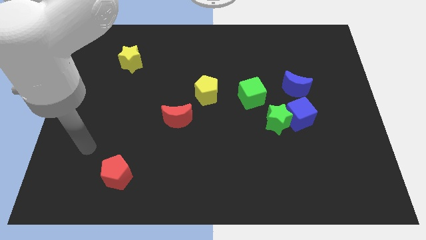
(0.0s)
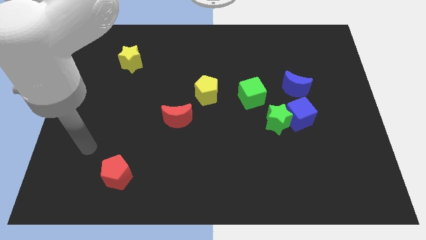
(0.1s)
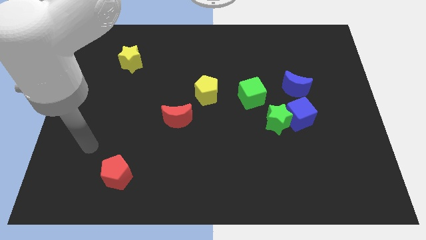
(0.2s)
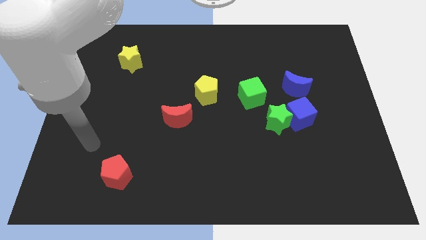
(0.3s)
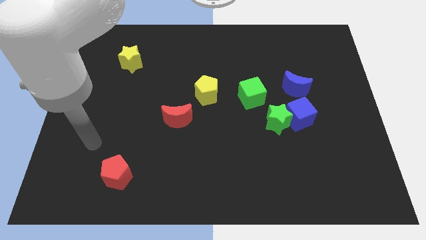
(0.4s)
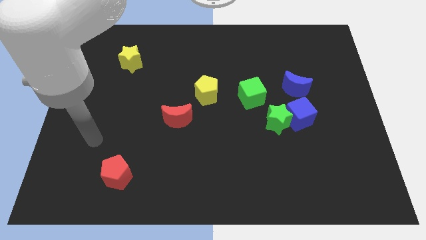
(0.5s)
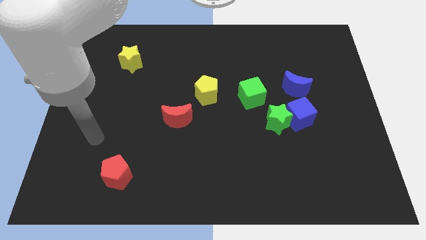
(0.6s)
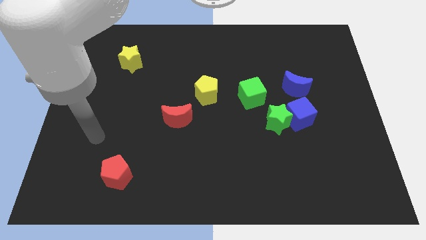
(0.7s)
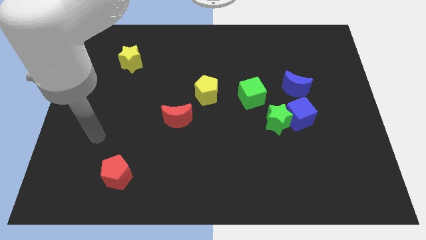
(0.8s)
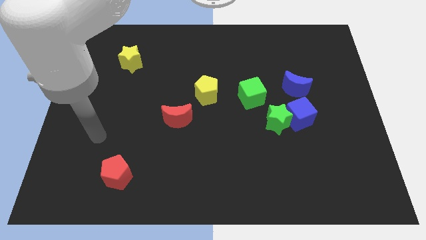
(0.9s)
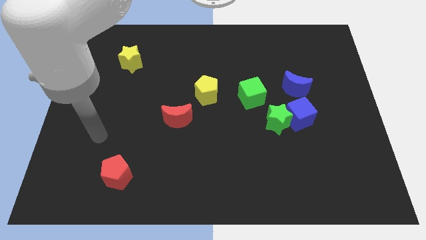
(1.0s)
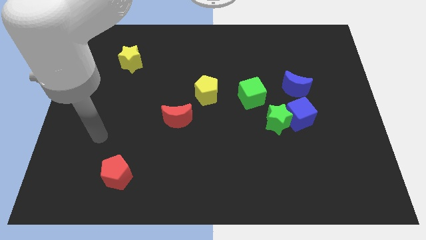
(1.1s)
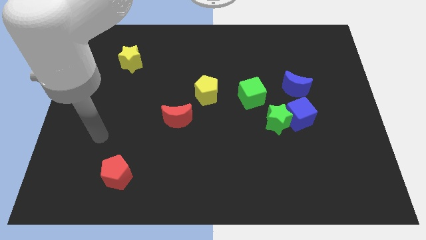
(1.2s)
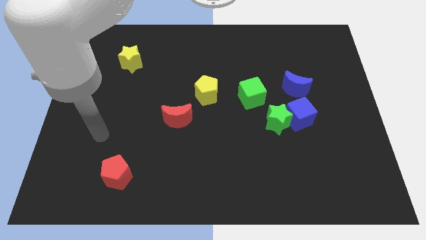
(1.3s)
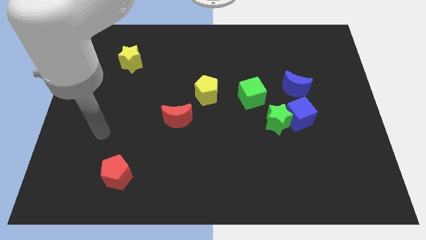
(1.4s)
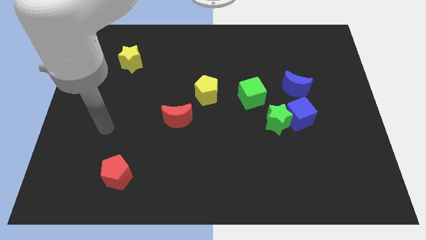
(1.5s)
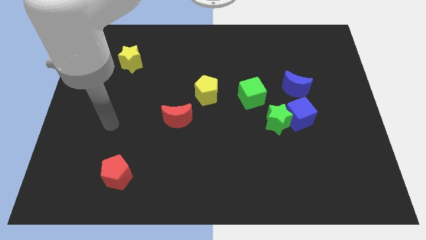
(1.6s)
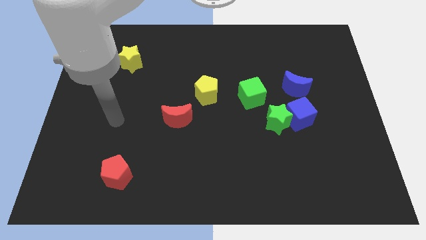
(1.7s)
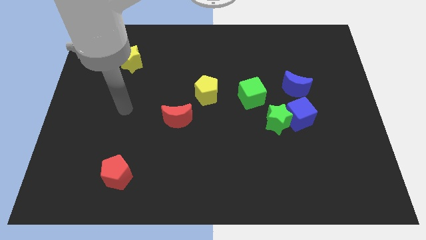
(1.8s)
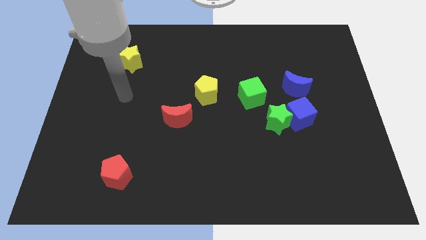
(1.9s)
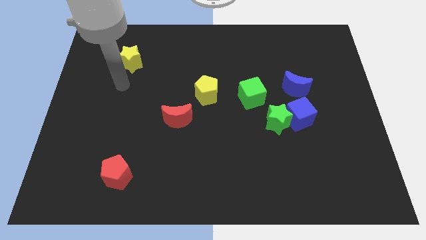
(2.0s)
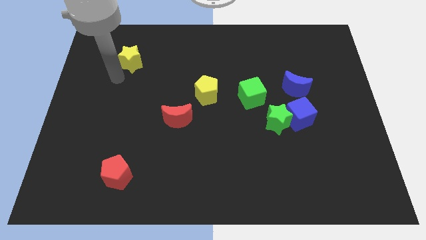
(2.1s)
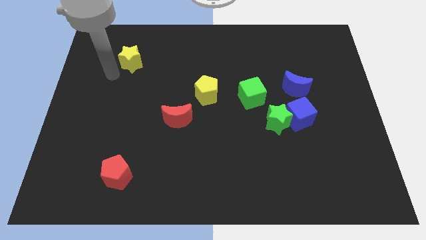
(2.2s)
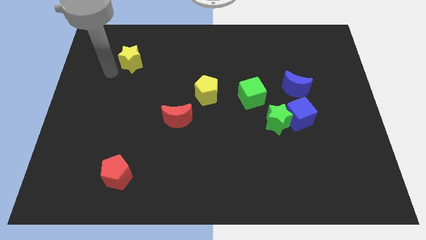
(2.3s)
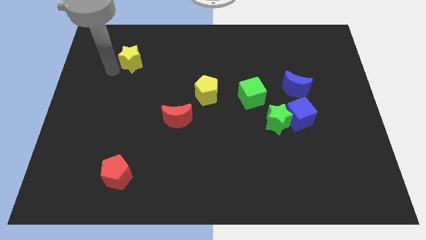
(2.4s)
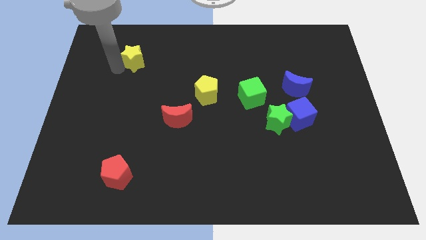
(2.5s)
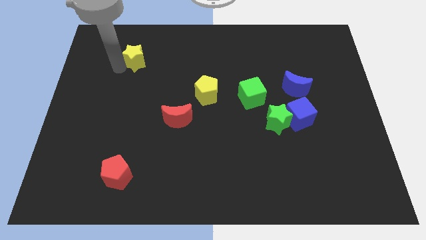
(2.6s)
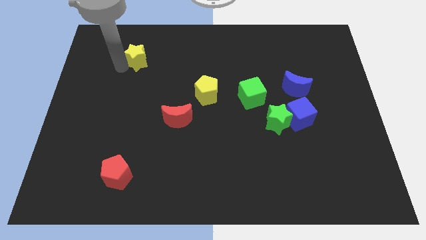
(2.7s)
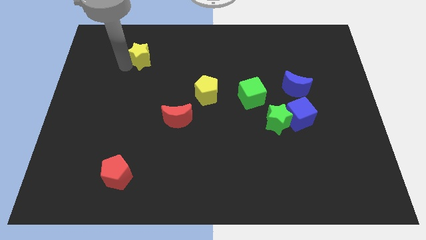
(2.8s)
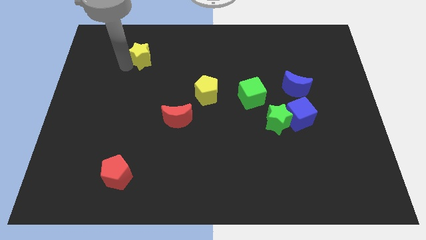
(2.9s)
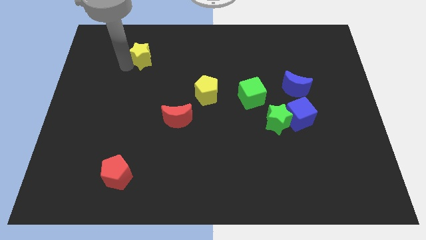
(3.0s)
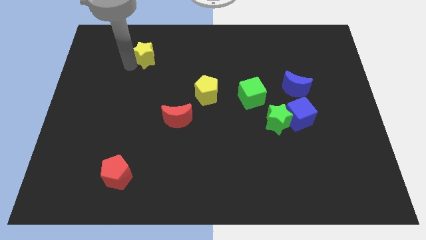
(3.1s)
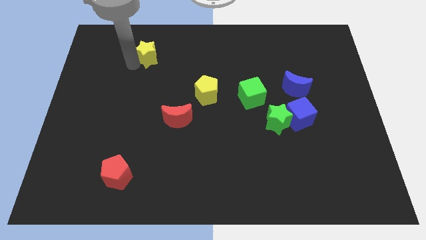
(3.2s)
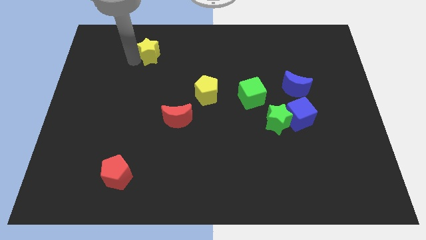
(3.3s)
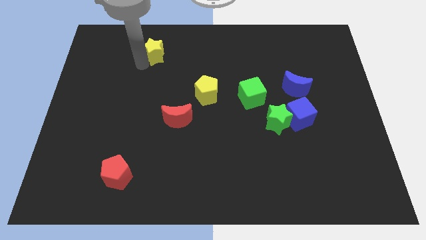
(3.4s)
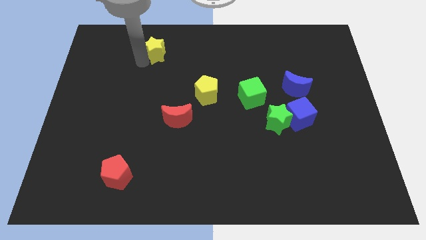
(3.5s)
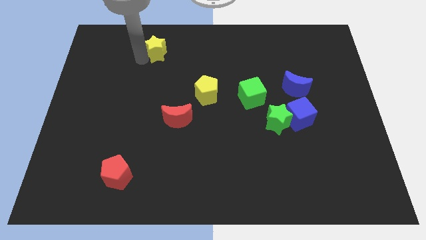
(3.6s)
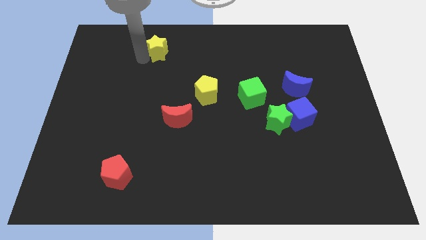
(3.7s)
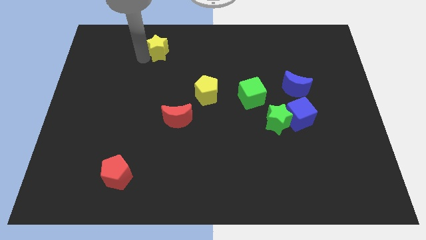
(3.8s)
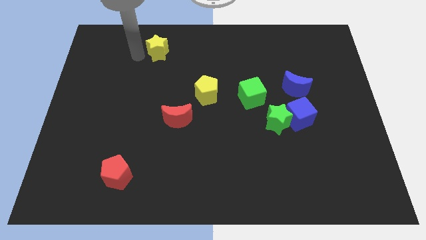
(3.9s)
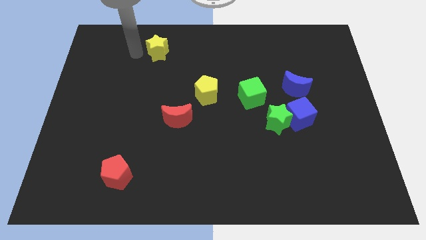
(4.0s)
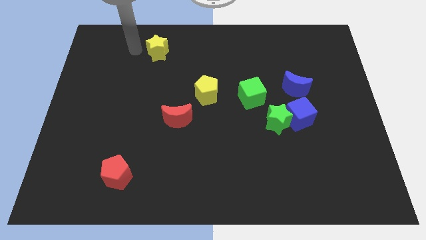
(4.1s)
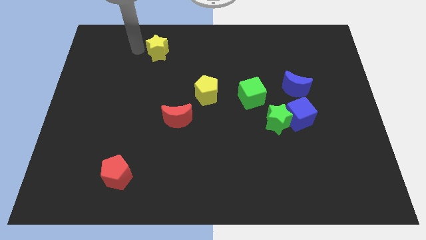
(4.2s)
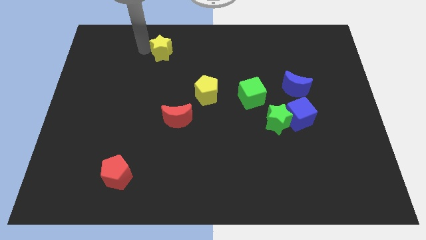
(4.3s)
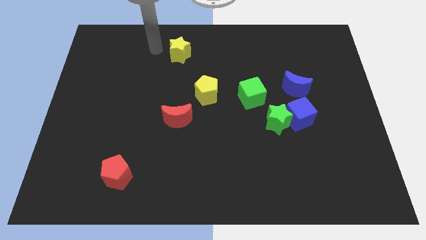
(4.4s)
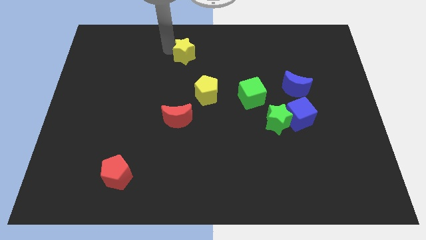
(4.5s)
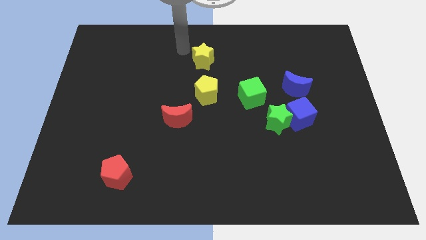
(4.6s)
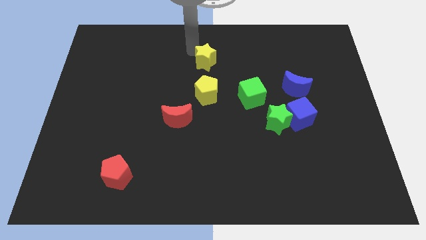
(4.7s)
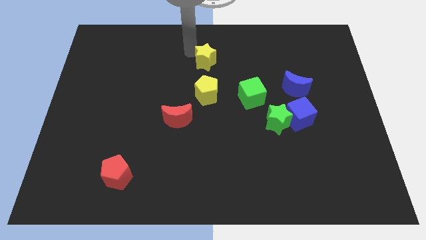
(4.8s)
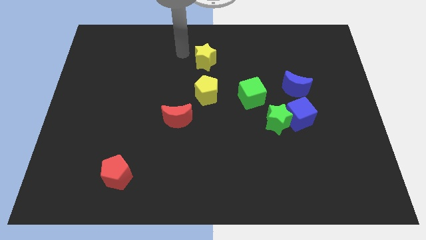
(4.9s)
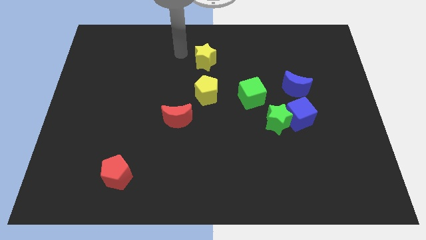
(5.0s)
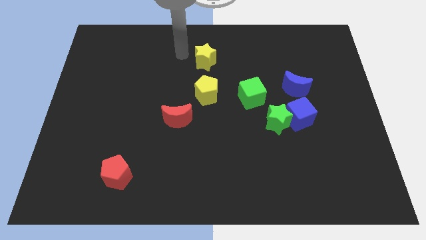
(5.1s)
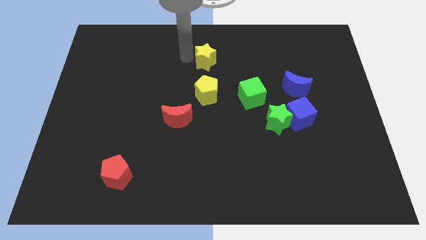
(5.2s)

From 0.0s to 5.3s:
push the yellow star above the yellow pentagon

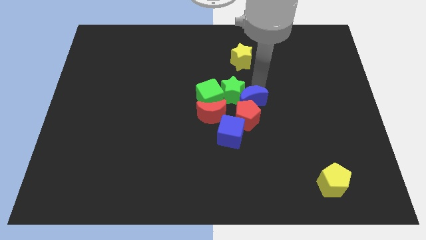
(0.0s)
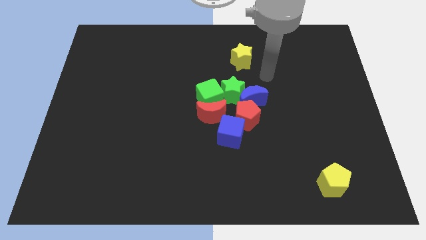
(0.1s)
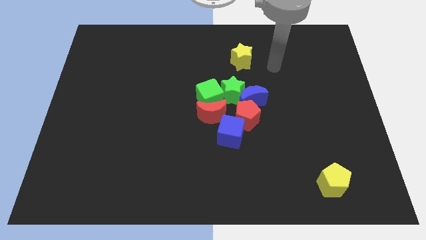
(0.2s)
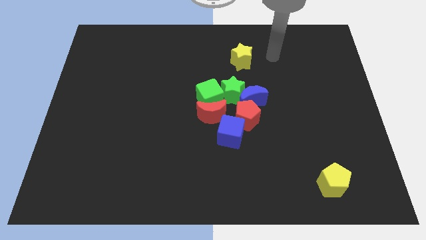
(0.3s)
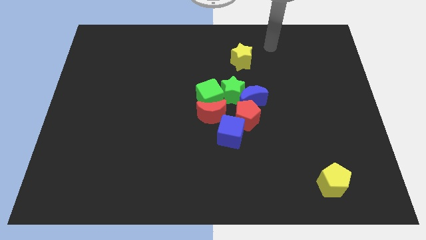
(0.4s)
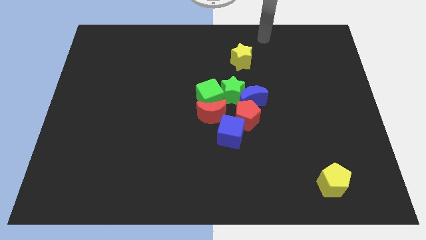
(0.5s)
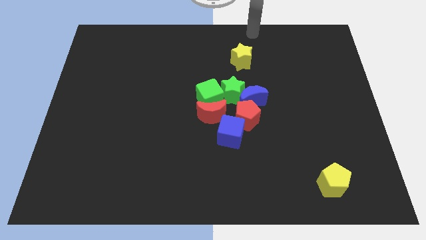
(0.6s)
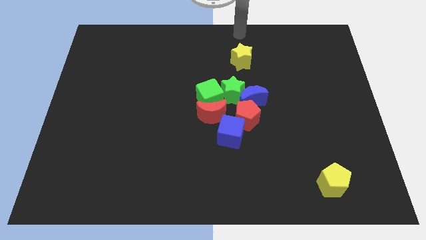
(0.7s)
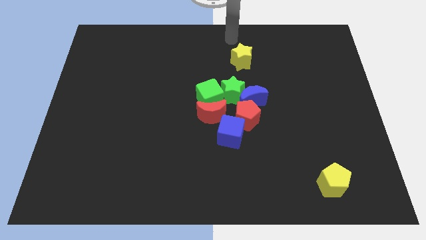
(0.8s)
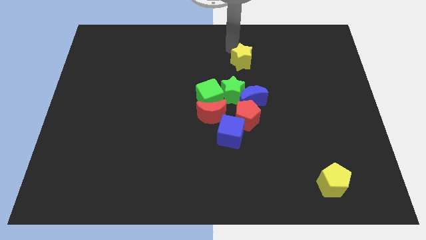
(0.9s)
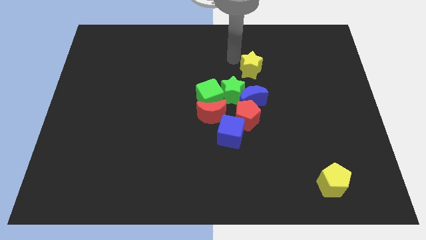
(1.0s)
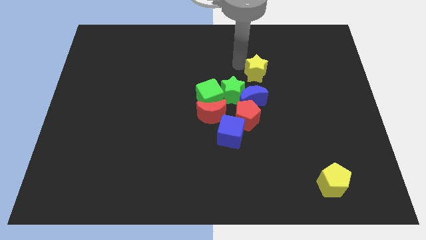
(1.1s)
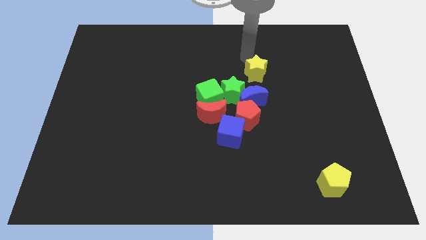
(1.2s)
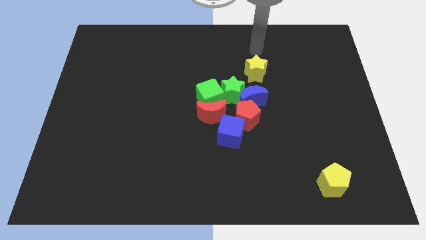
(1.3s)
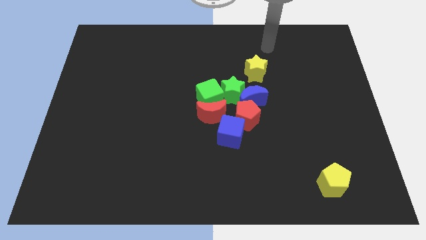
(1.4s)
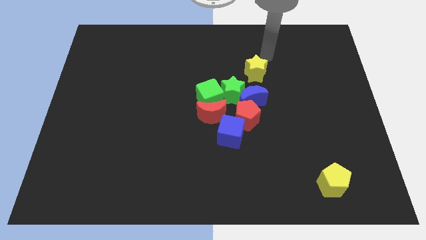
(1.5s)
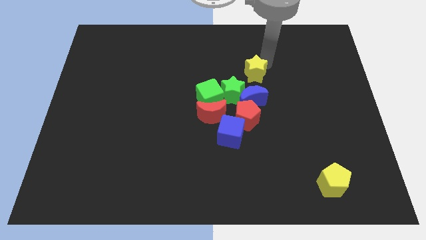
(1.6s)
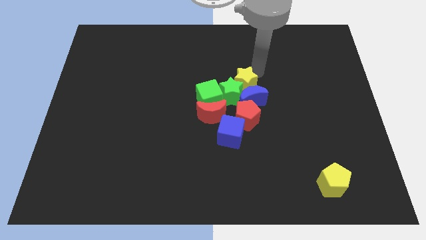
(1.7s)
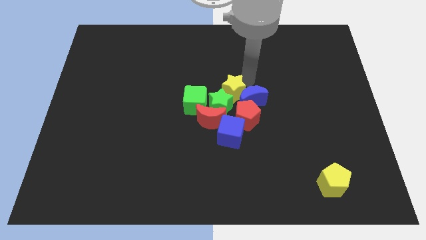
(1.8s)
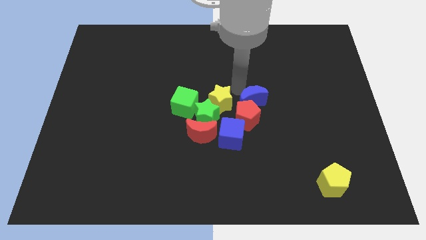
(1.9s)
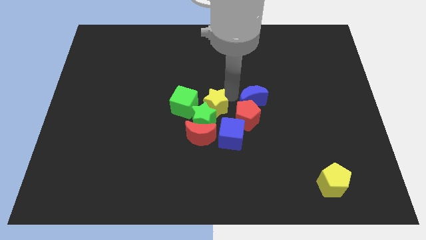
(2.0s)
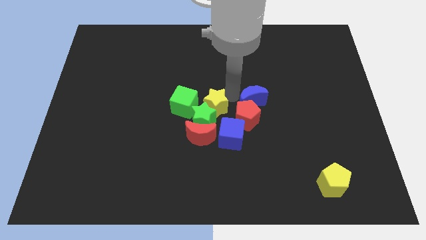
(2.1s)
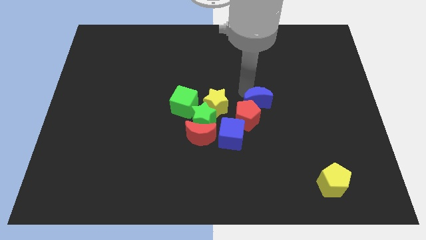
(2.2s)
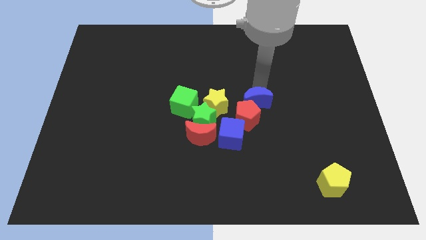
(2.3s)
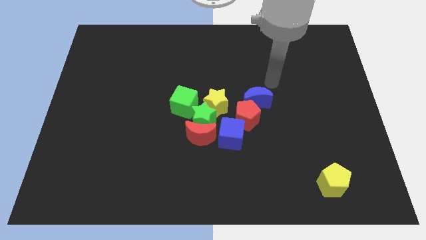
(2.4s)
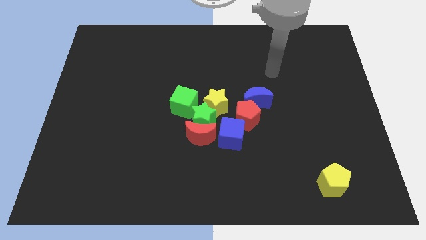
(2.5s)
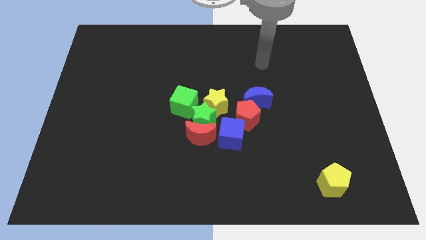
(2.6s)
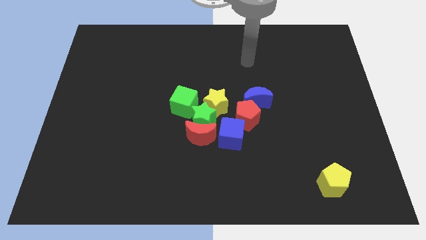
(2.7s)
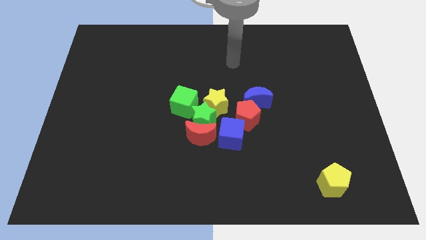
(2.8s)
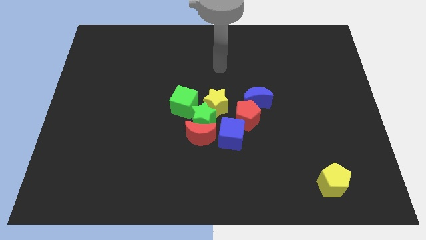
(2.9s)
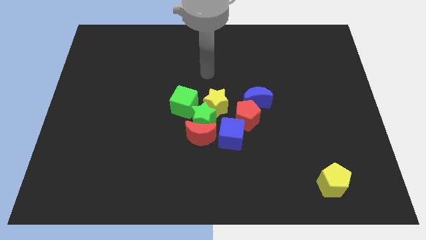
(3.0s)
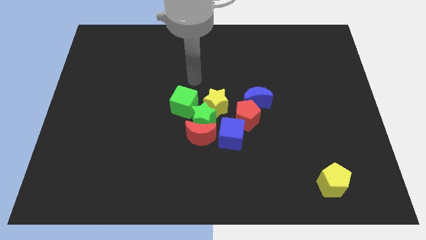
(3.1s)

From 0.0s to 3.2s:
push the yellow star to the left of the blue crescent

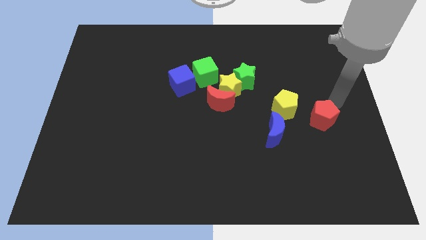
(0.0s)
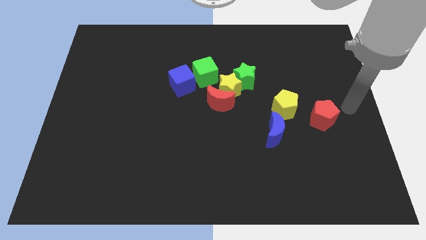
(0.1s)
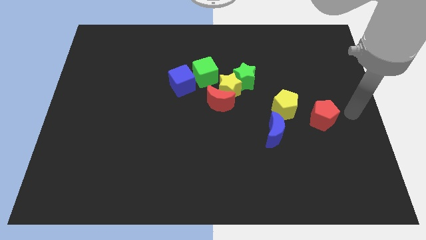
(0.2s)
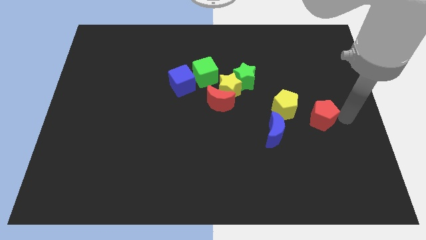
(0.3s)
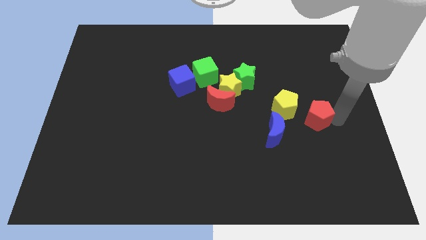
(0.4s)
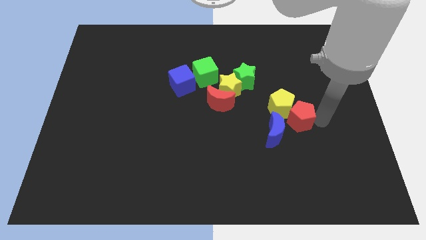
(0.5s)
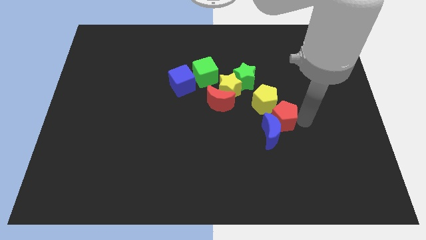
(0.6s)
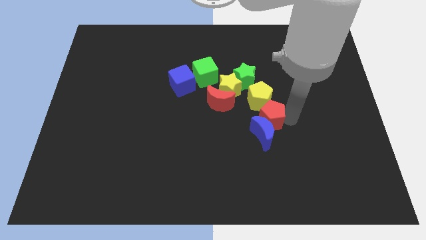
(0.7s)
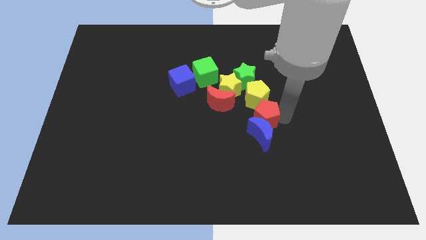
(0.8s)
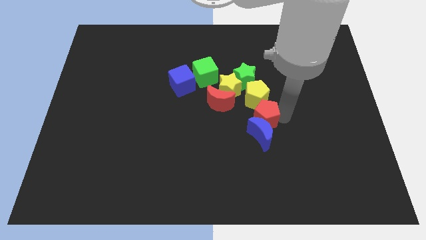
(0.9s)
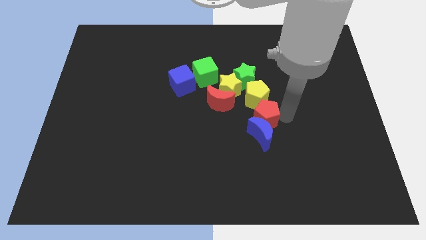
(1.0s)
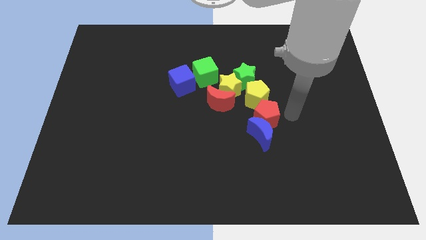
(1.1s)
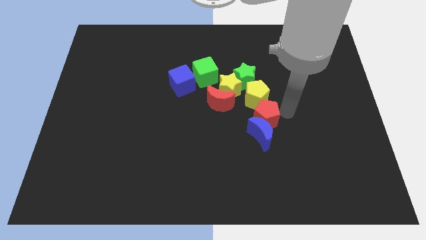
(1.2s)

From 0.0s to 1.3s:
move red pentagon into the yellow pentagon
